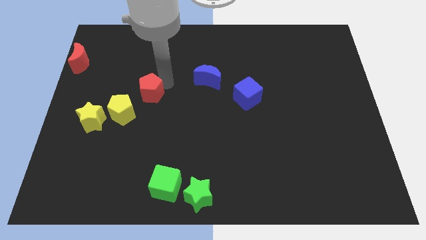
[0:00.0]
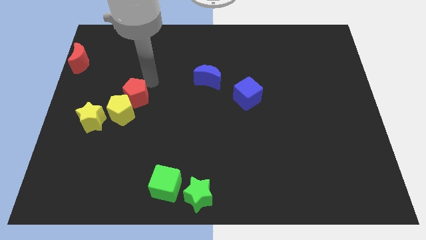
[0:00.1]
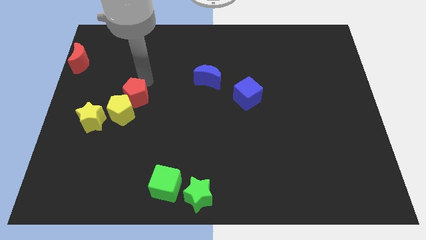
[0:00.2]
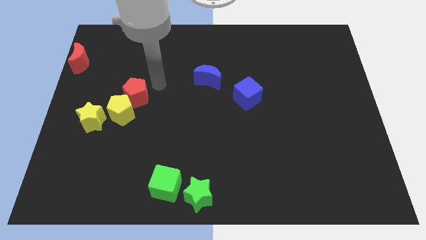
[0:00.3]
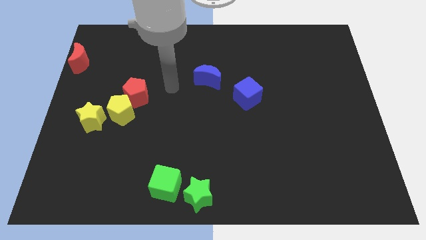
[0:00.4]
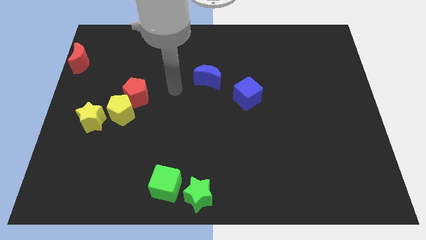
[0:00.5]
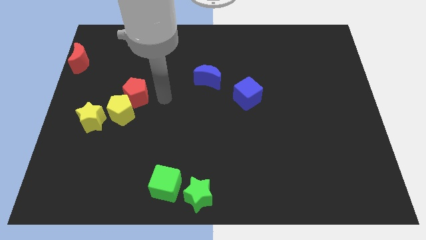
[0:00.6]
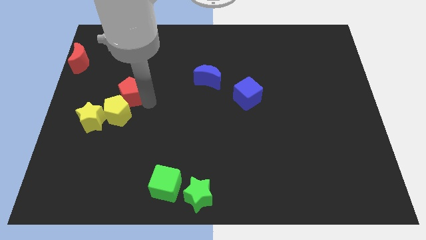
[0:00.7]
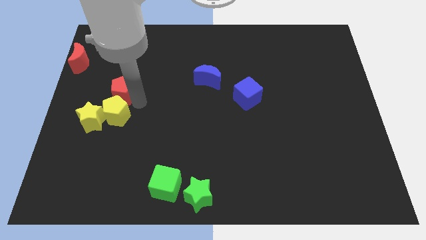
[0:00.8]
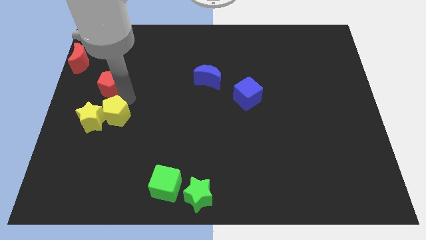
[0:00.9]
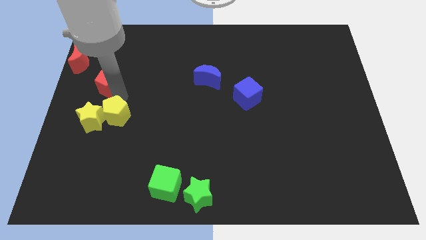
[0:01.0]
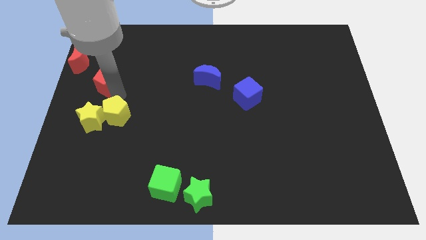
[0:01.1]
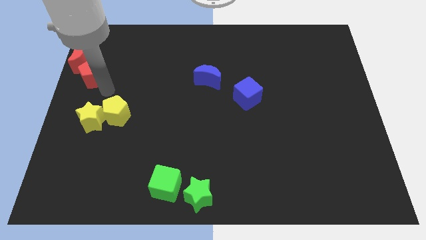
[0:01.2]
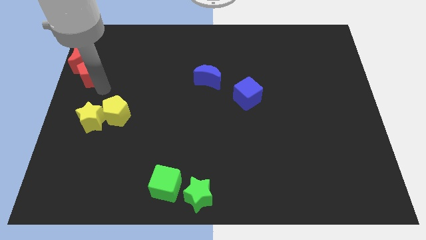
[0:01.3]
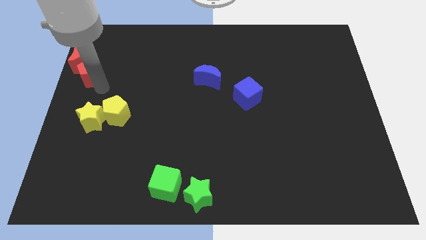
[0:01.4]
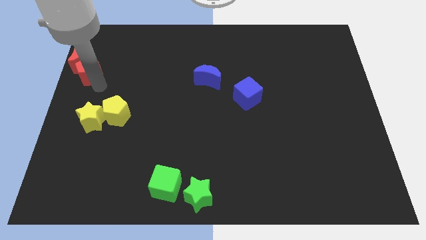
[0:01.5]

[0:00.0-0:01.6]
move the red pentagon below to the red moon

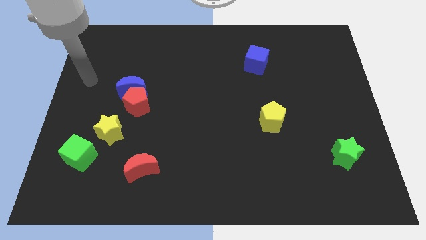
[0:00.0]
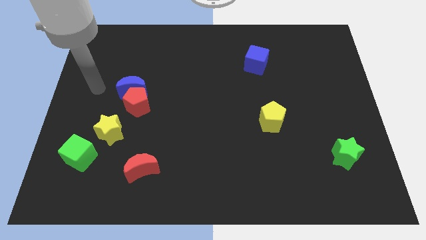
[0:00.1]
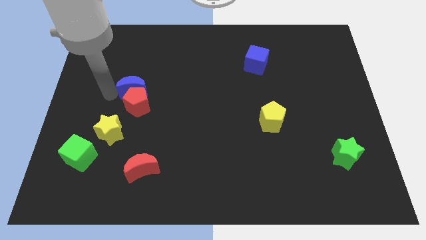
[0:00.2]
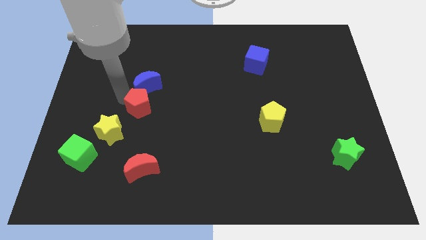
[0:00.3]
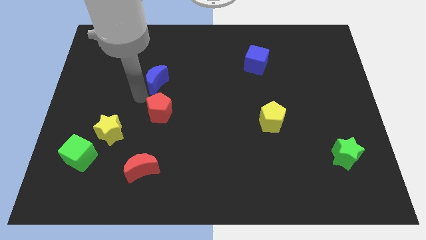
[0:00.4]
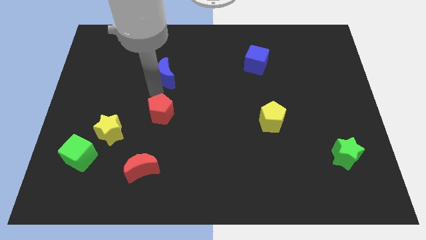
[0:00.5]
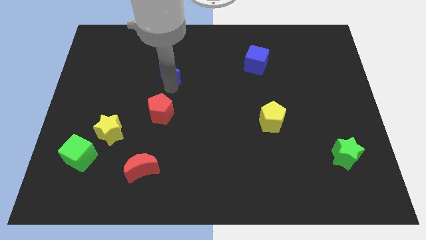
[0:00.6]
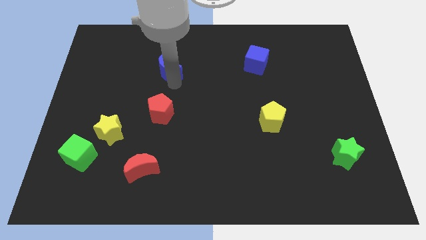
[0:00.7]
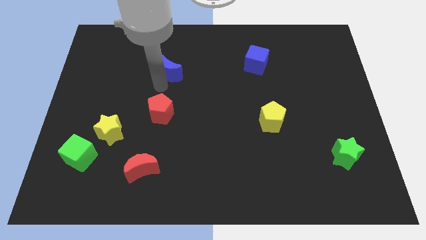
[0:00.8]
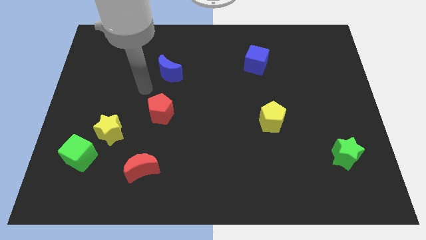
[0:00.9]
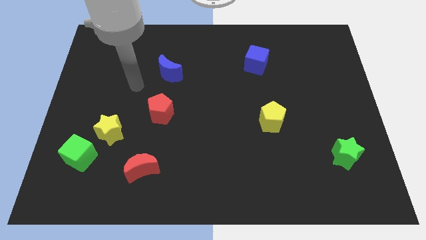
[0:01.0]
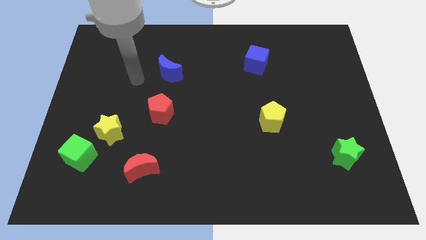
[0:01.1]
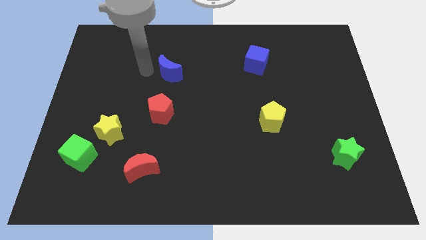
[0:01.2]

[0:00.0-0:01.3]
separate the blue moon from the red pentagon

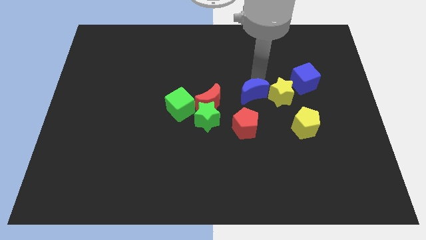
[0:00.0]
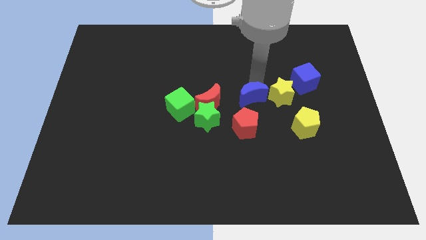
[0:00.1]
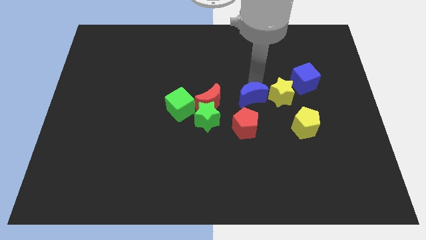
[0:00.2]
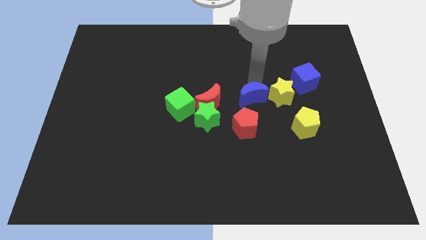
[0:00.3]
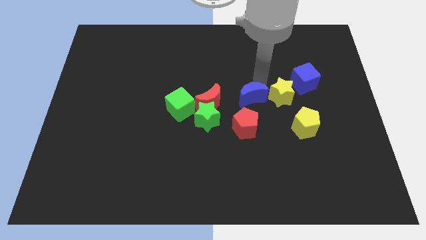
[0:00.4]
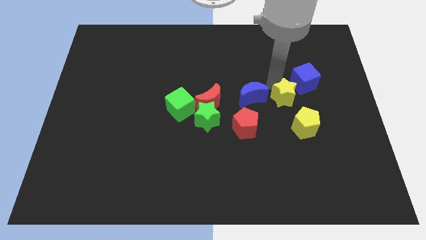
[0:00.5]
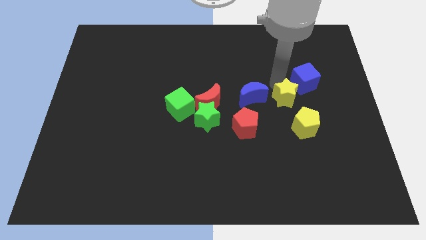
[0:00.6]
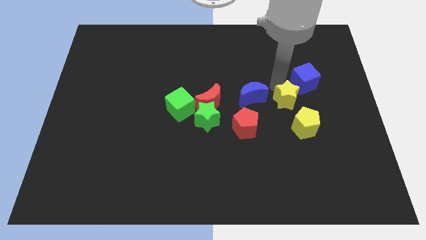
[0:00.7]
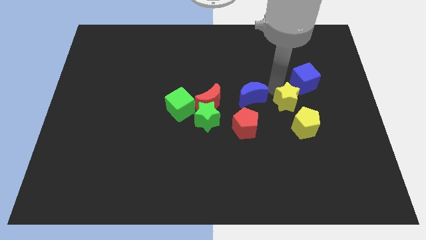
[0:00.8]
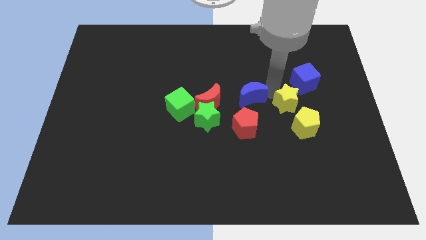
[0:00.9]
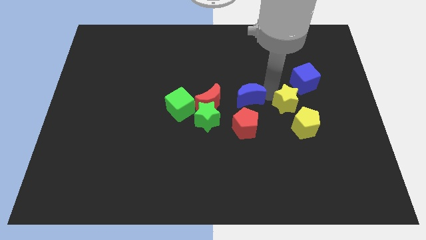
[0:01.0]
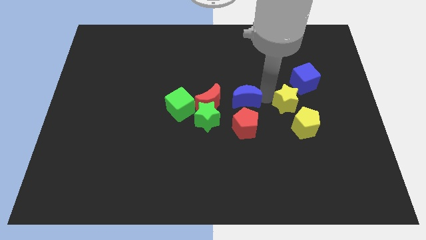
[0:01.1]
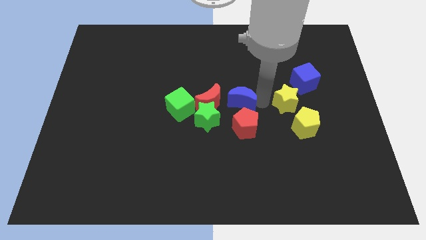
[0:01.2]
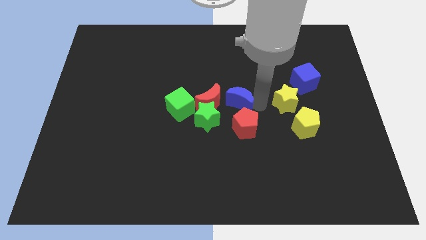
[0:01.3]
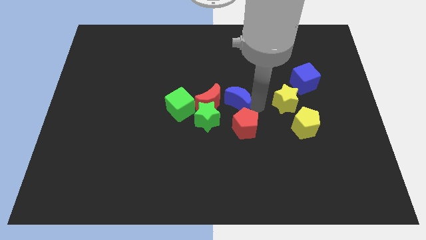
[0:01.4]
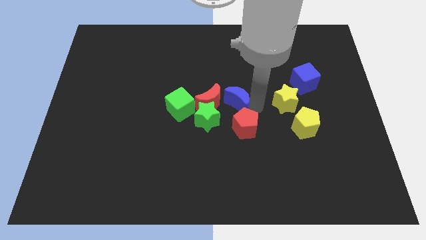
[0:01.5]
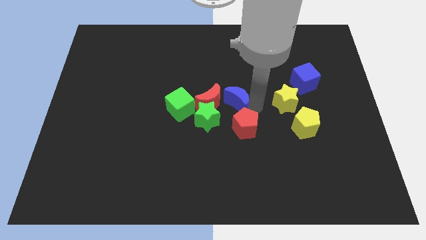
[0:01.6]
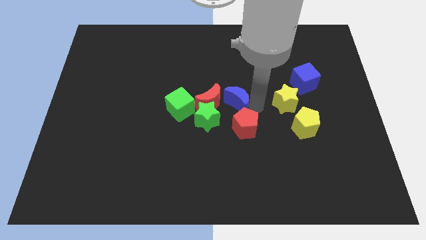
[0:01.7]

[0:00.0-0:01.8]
separate the yellow star and the blue moon

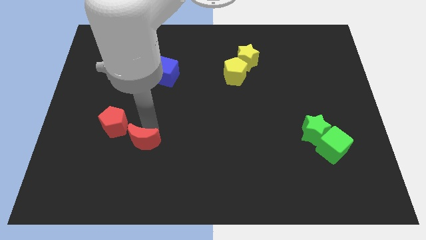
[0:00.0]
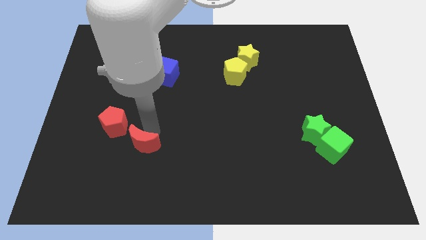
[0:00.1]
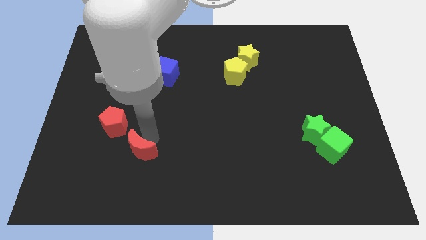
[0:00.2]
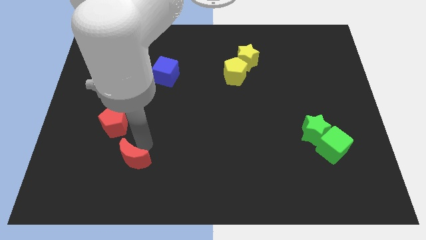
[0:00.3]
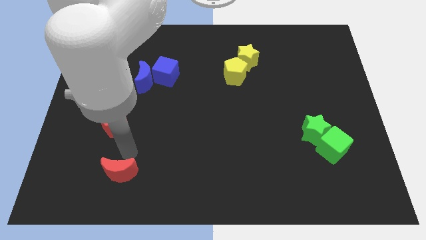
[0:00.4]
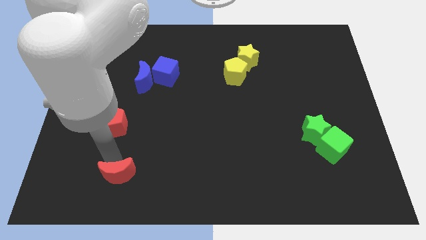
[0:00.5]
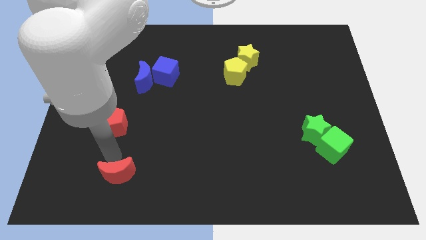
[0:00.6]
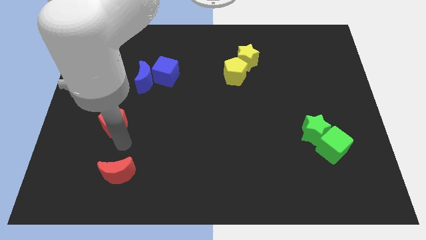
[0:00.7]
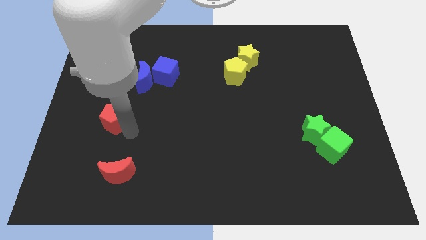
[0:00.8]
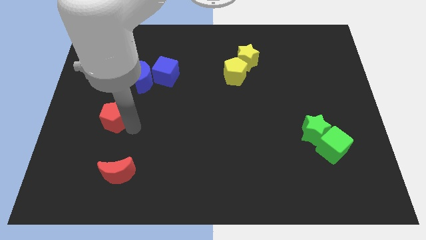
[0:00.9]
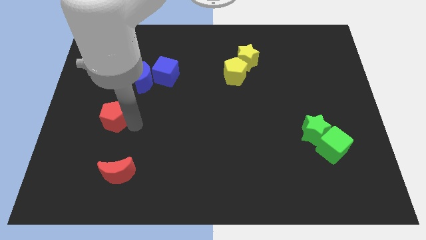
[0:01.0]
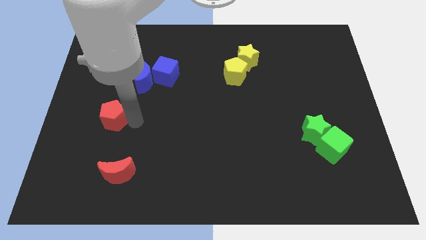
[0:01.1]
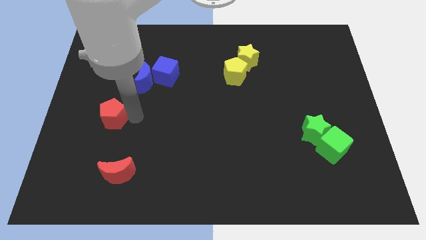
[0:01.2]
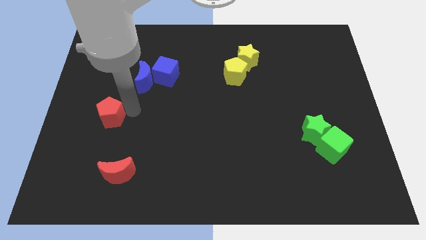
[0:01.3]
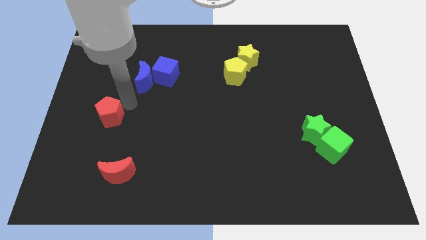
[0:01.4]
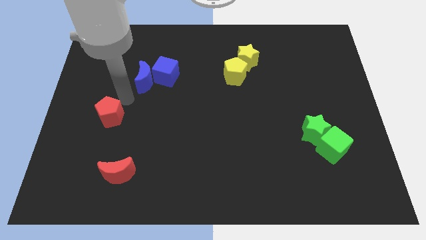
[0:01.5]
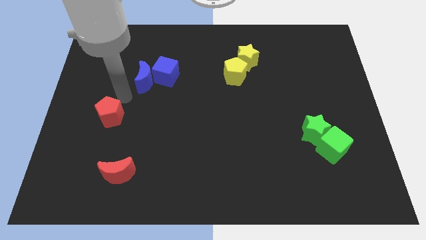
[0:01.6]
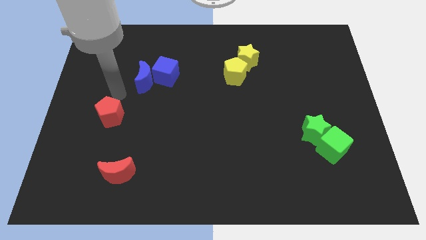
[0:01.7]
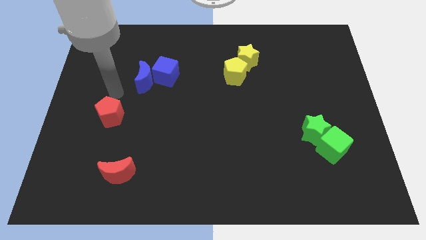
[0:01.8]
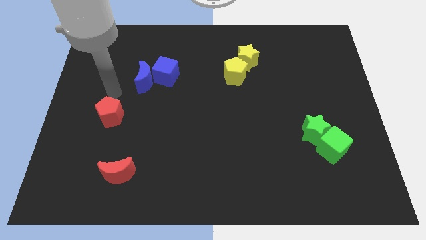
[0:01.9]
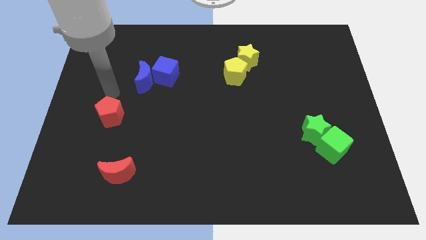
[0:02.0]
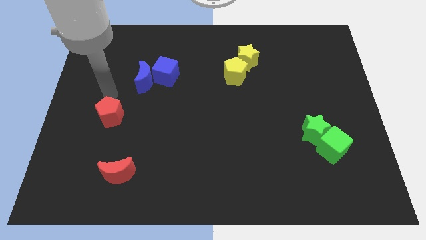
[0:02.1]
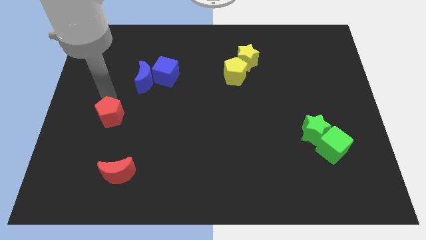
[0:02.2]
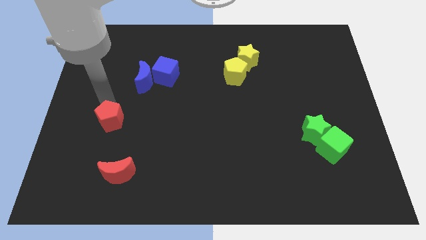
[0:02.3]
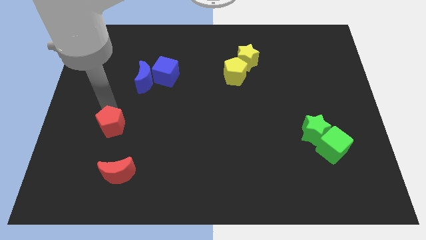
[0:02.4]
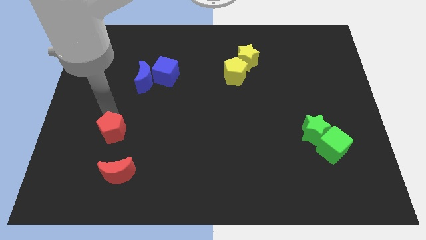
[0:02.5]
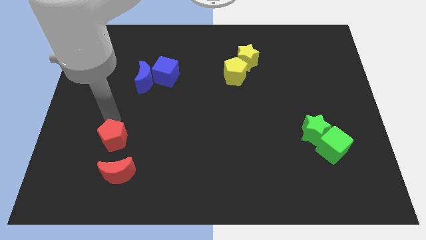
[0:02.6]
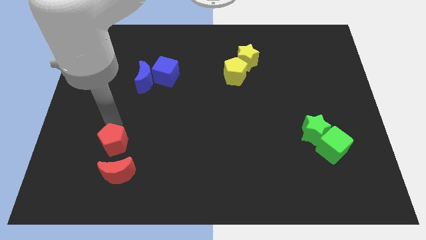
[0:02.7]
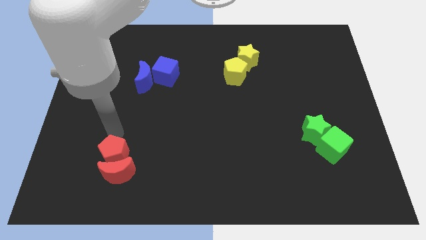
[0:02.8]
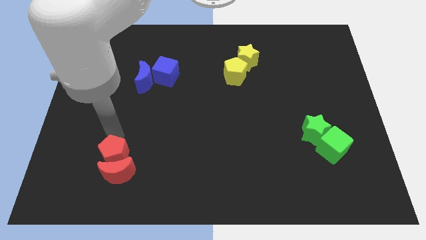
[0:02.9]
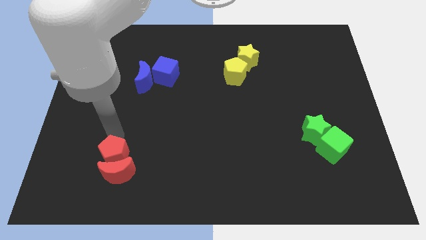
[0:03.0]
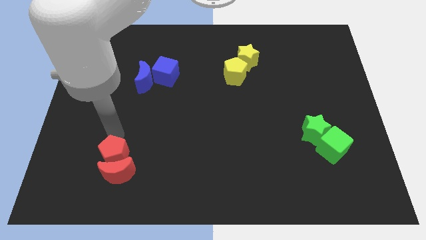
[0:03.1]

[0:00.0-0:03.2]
move the red blocks downwards and put them together at the bottom

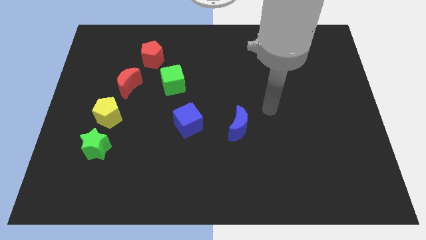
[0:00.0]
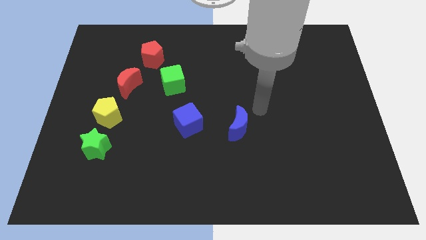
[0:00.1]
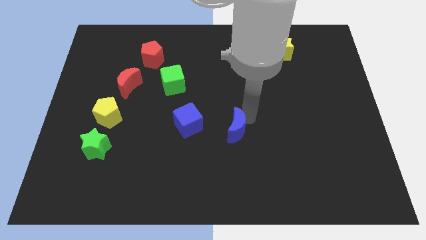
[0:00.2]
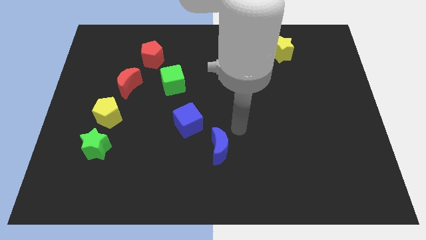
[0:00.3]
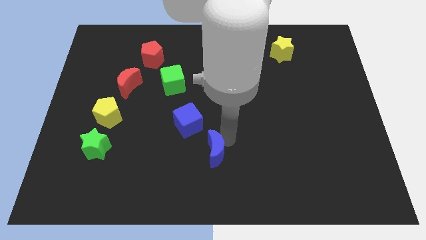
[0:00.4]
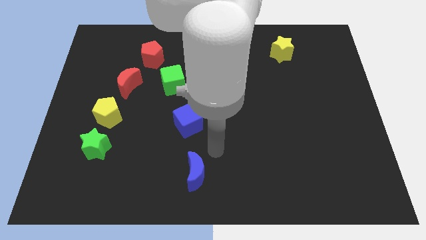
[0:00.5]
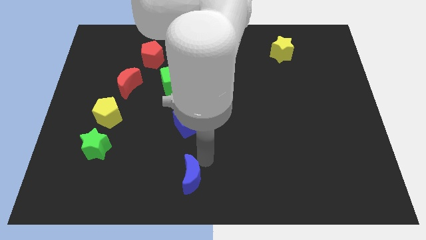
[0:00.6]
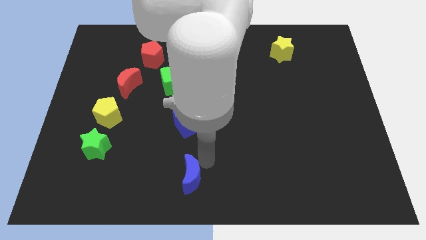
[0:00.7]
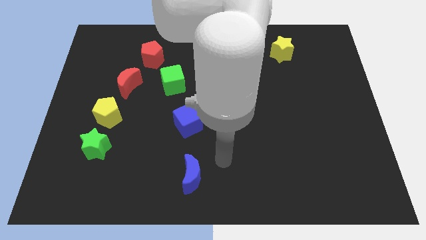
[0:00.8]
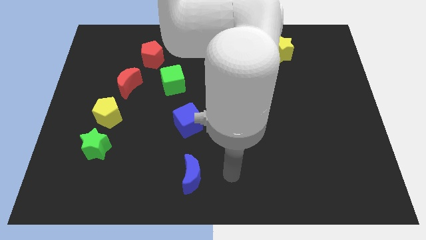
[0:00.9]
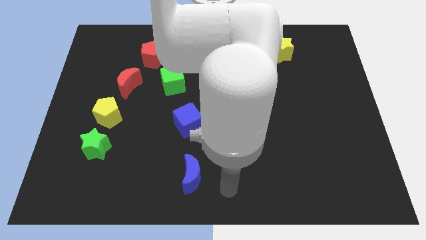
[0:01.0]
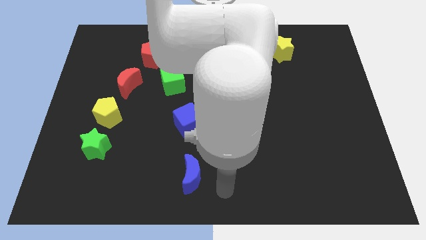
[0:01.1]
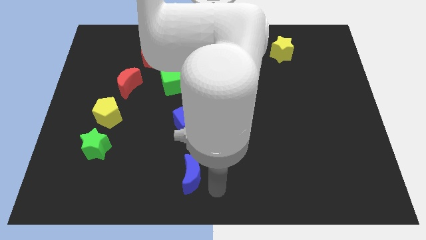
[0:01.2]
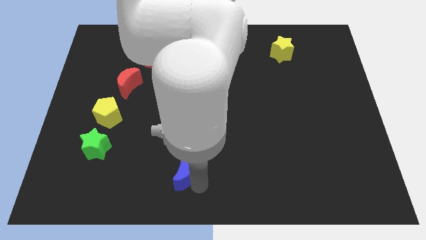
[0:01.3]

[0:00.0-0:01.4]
place the blue moon to the bottom center
